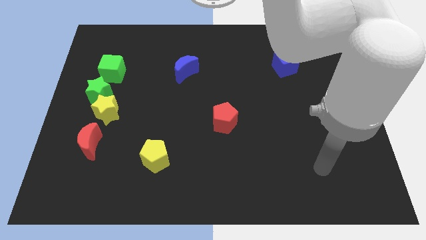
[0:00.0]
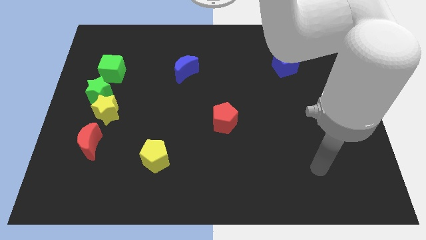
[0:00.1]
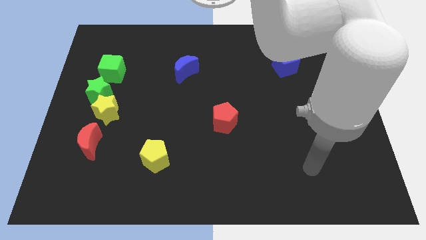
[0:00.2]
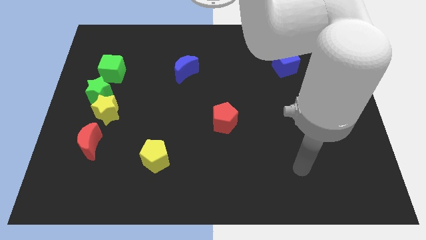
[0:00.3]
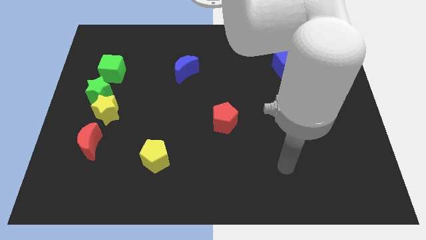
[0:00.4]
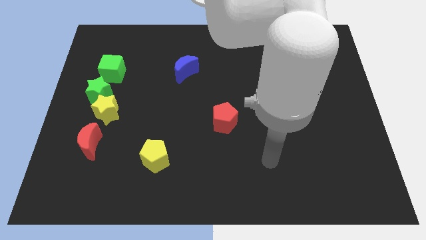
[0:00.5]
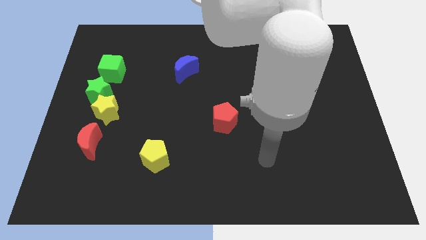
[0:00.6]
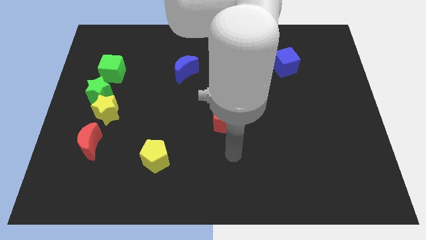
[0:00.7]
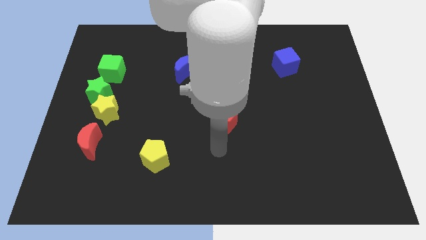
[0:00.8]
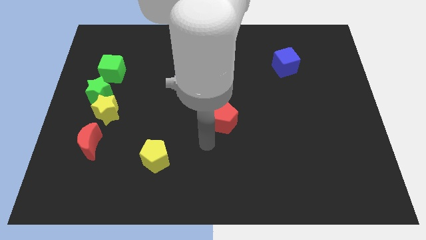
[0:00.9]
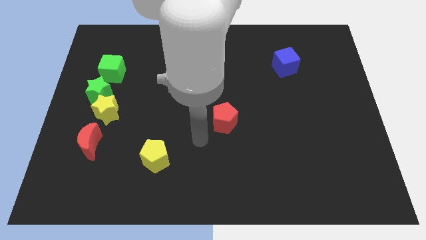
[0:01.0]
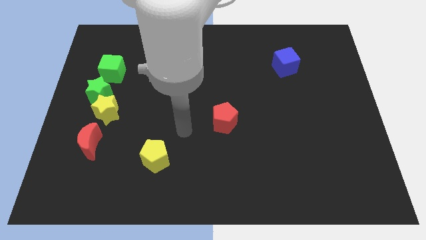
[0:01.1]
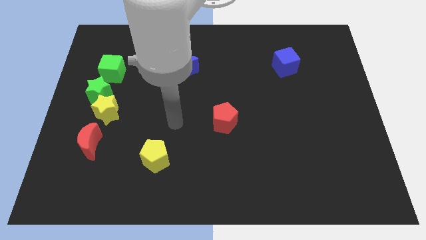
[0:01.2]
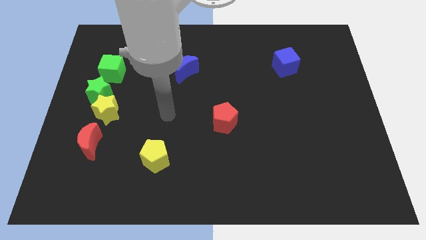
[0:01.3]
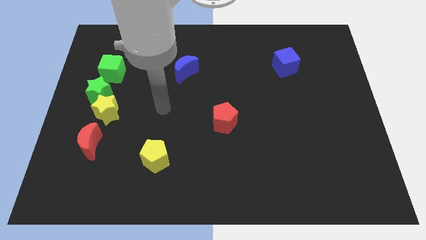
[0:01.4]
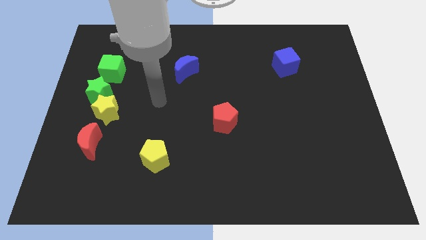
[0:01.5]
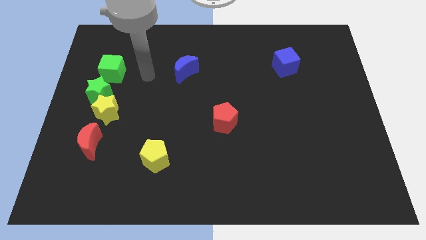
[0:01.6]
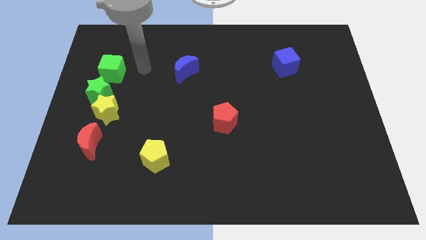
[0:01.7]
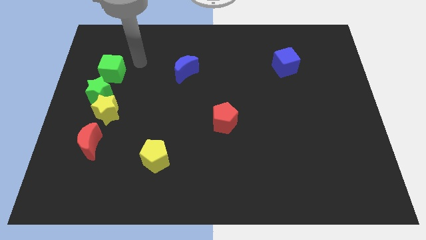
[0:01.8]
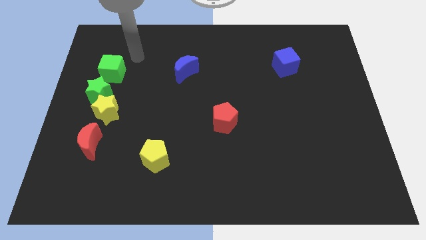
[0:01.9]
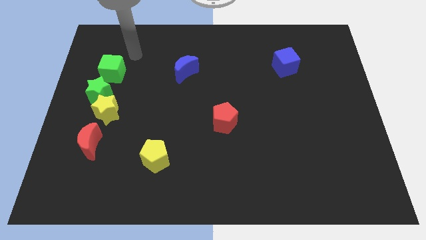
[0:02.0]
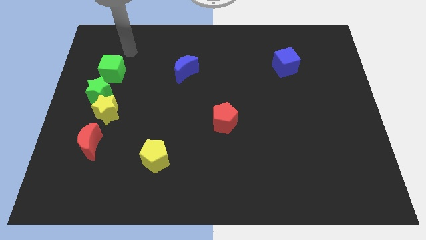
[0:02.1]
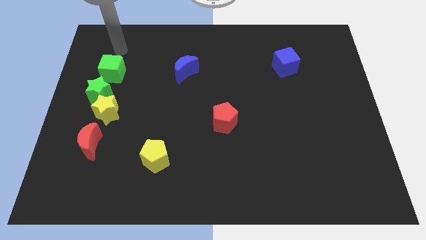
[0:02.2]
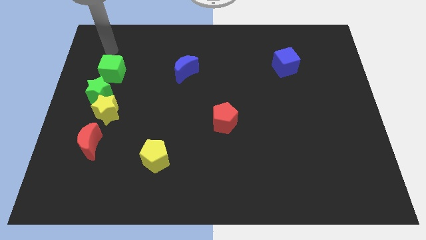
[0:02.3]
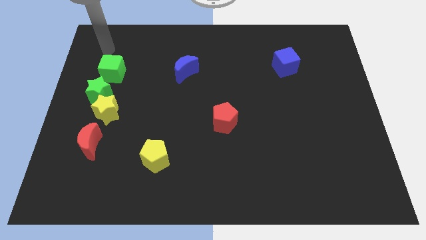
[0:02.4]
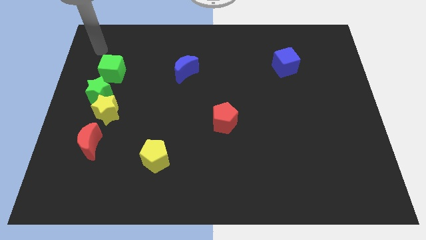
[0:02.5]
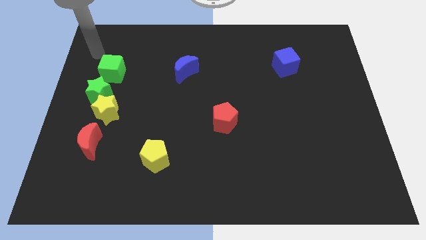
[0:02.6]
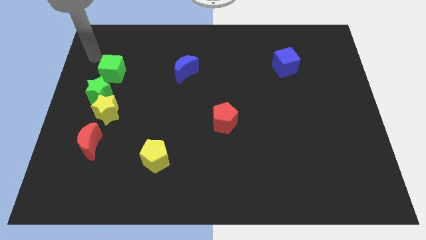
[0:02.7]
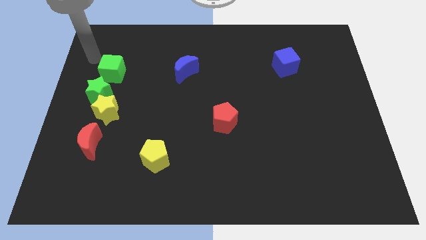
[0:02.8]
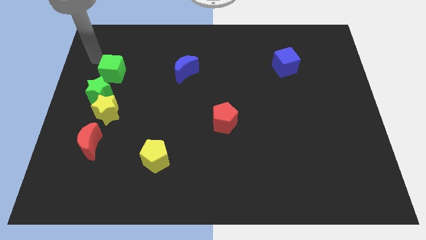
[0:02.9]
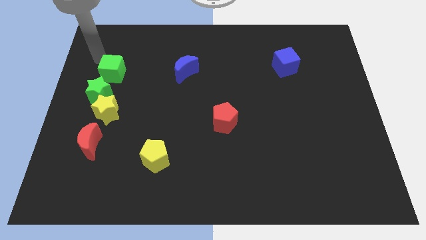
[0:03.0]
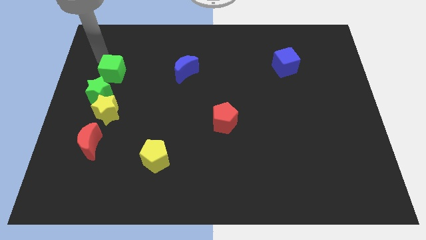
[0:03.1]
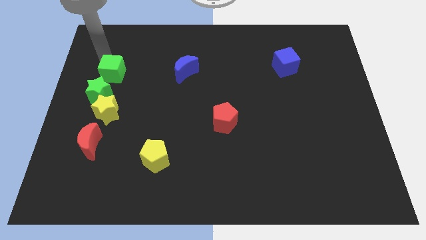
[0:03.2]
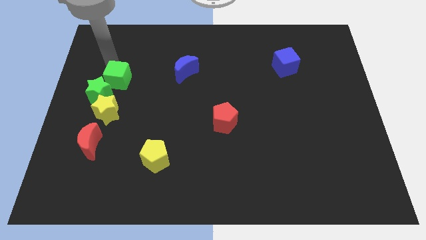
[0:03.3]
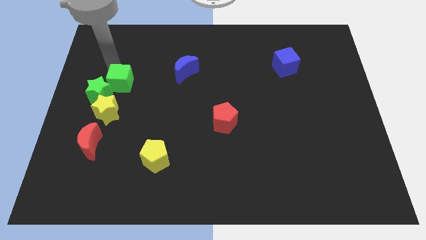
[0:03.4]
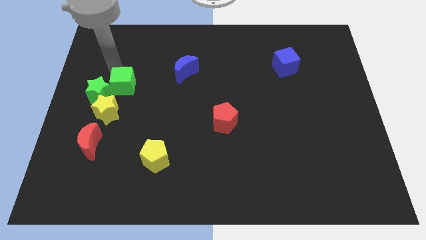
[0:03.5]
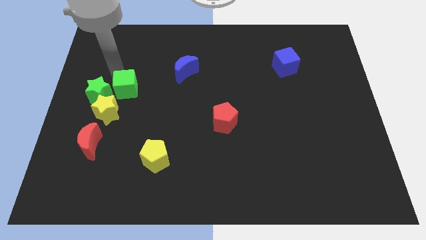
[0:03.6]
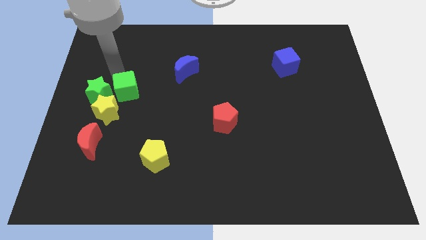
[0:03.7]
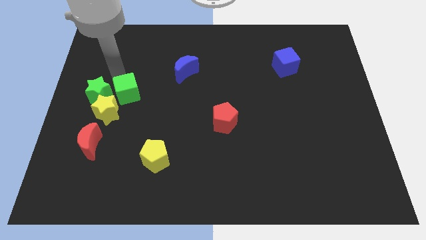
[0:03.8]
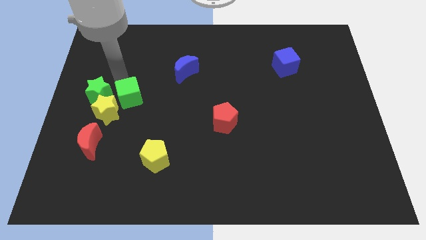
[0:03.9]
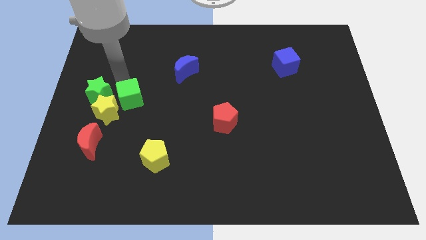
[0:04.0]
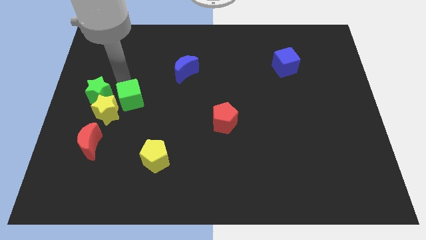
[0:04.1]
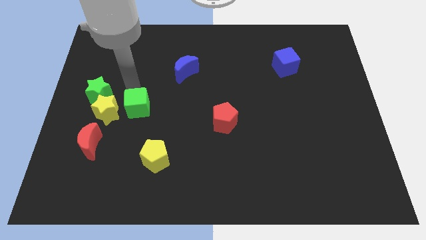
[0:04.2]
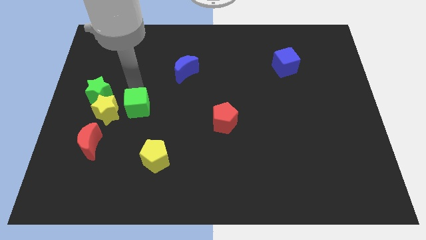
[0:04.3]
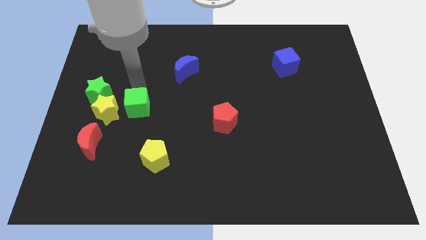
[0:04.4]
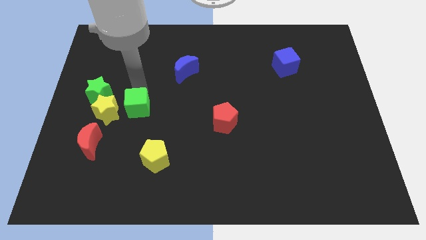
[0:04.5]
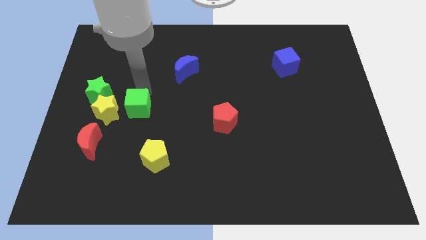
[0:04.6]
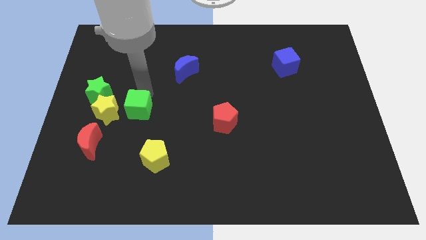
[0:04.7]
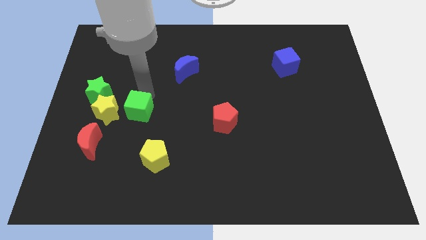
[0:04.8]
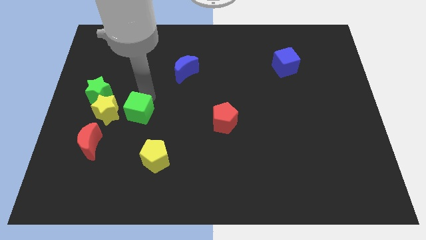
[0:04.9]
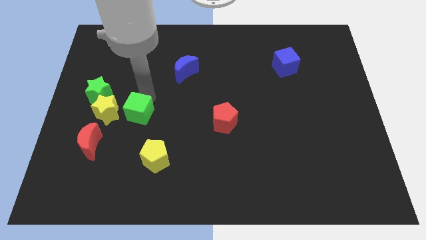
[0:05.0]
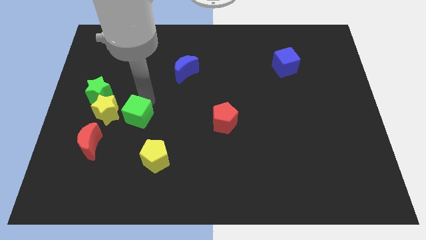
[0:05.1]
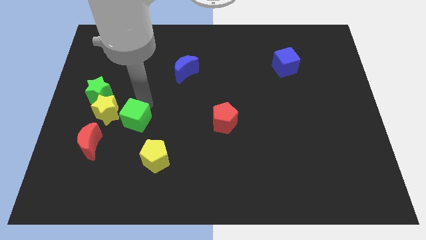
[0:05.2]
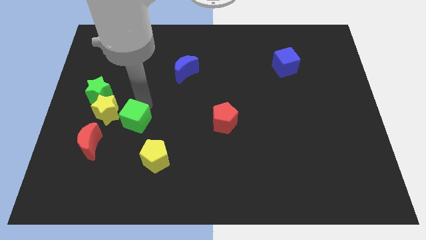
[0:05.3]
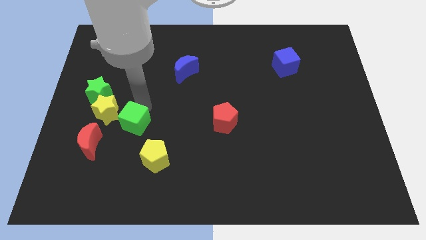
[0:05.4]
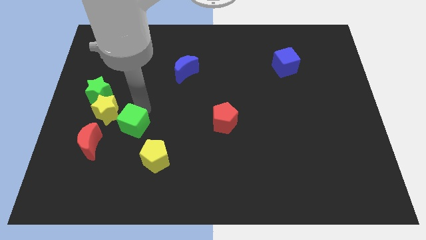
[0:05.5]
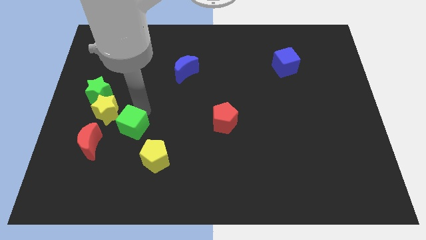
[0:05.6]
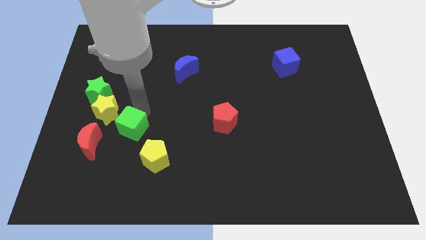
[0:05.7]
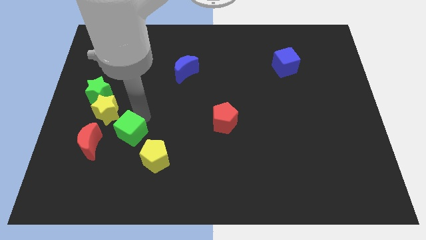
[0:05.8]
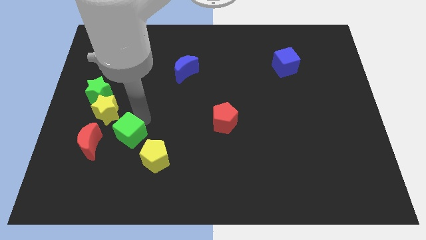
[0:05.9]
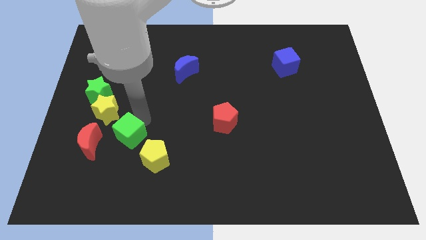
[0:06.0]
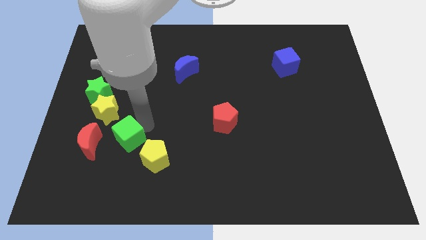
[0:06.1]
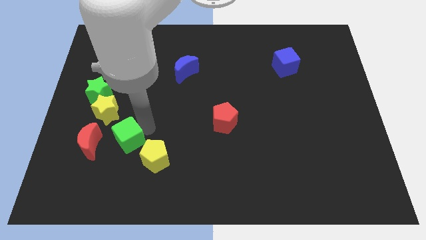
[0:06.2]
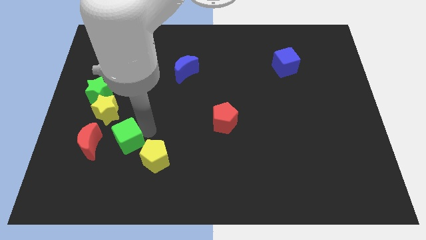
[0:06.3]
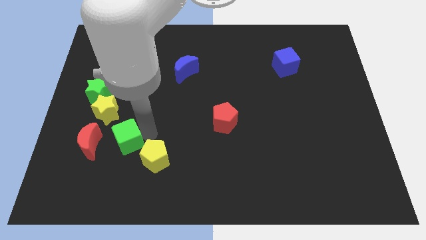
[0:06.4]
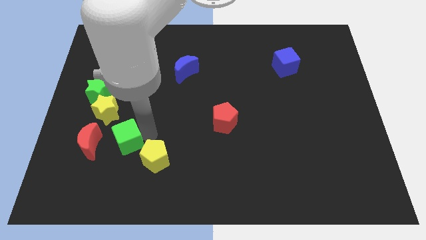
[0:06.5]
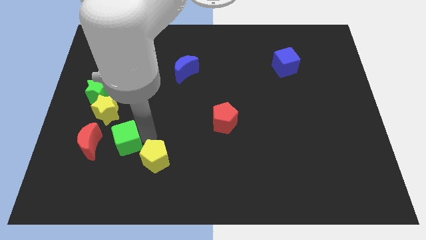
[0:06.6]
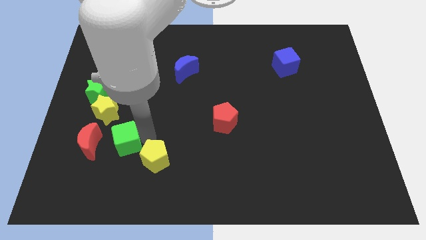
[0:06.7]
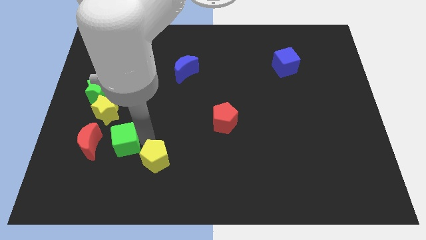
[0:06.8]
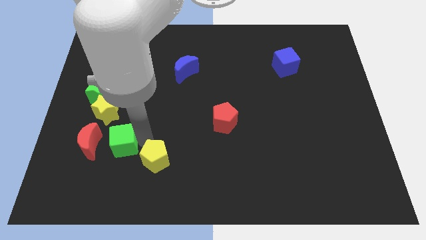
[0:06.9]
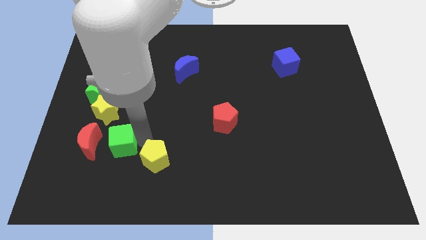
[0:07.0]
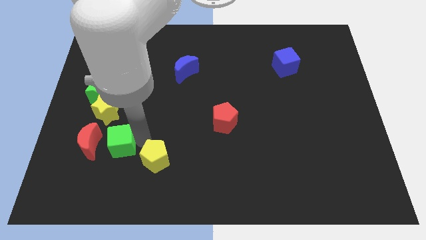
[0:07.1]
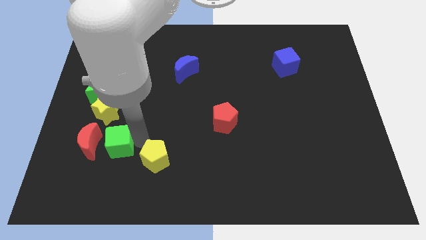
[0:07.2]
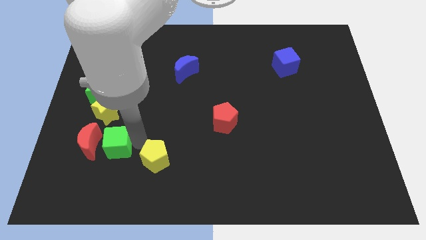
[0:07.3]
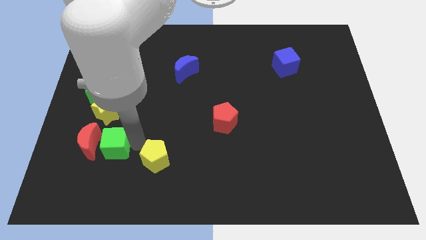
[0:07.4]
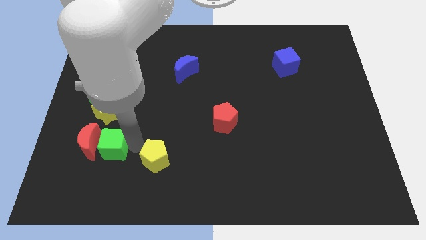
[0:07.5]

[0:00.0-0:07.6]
put the green cube towards the red moon
